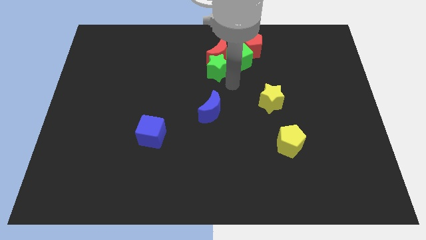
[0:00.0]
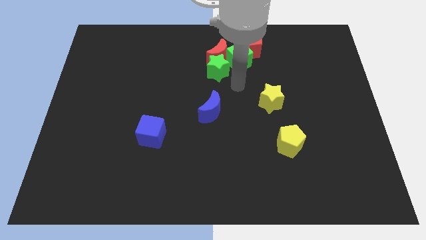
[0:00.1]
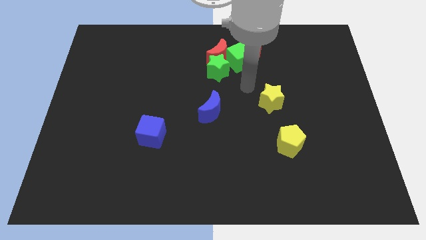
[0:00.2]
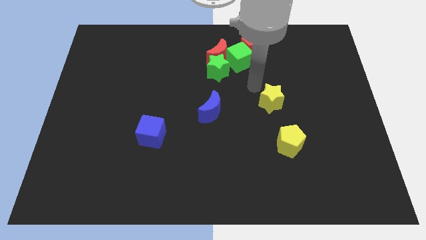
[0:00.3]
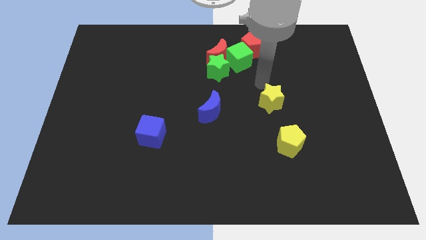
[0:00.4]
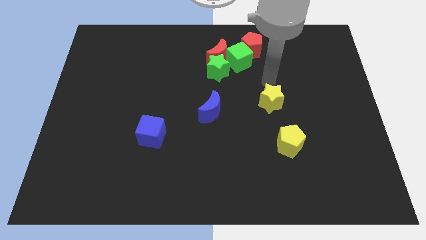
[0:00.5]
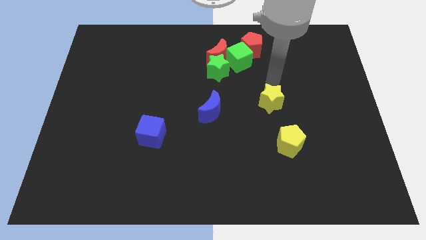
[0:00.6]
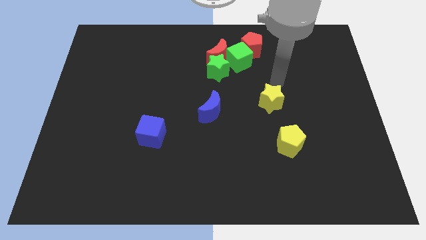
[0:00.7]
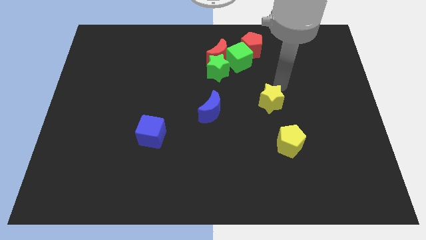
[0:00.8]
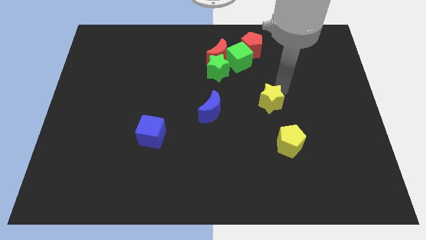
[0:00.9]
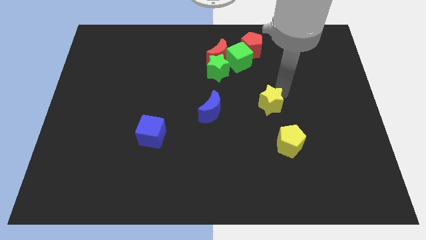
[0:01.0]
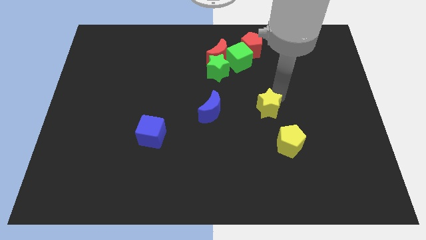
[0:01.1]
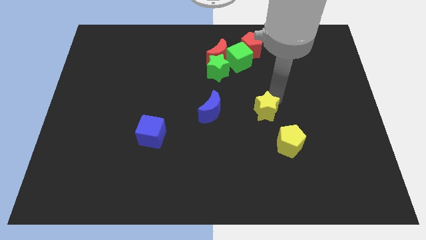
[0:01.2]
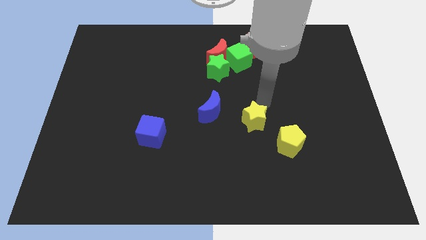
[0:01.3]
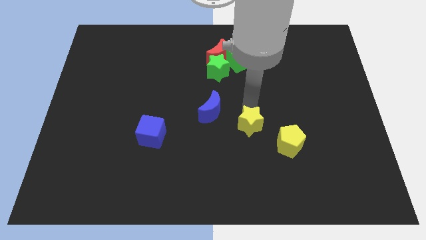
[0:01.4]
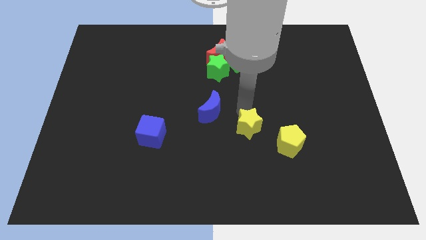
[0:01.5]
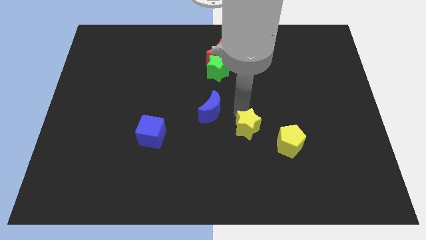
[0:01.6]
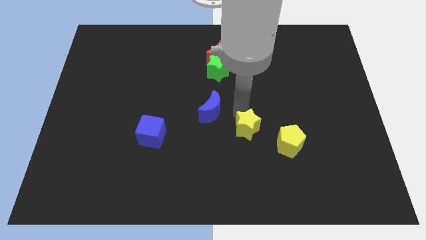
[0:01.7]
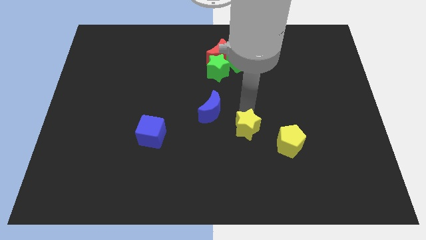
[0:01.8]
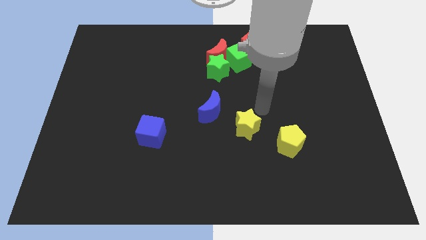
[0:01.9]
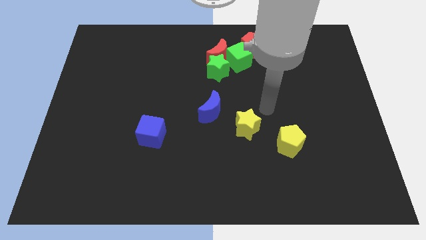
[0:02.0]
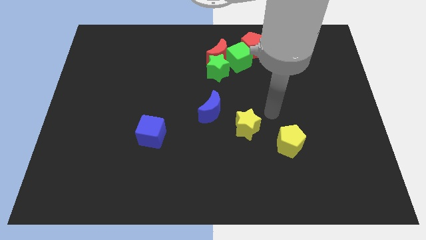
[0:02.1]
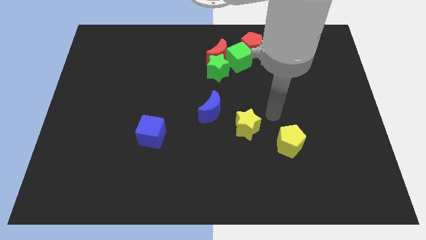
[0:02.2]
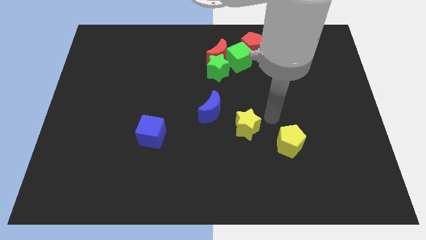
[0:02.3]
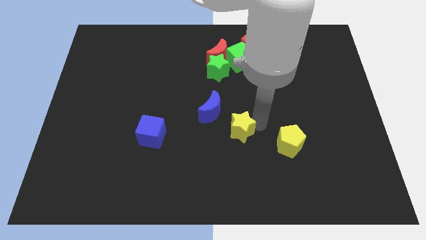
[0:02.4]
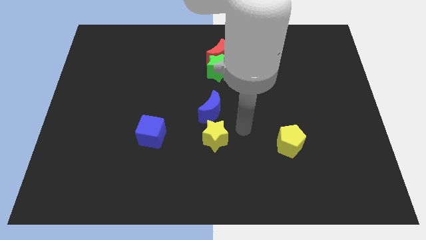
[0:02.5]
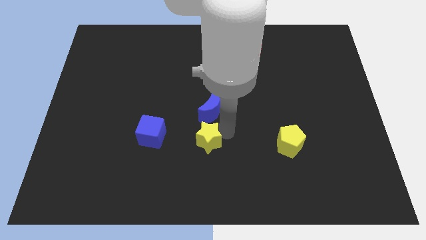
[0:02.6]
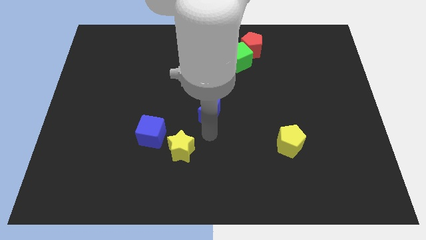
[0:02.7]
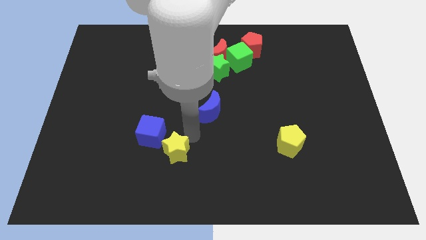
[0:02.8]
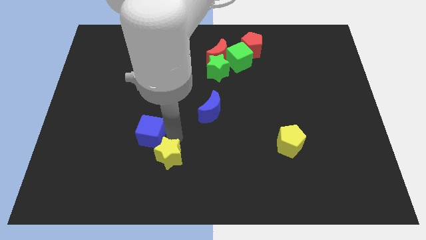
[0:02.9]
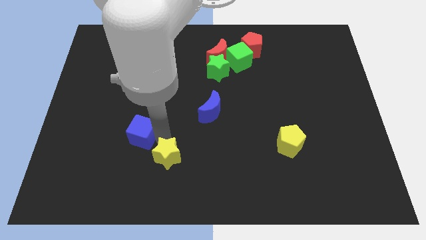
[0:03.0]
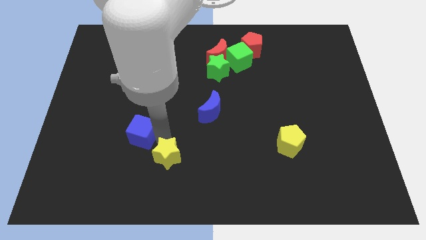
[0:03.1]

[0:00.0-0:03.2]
slide yellow star diagonally bottom left to the blue moon

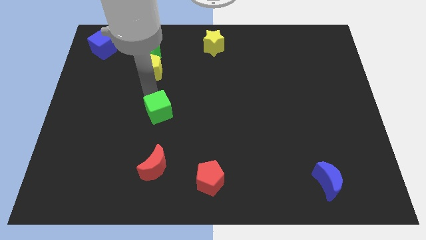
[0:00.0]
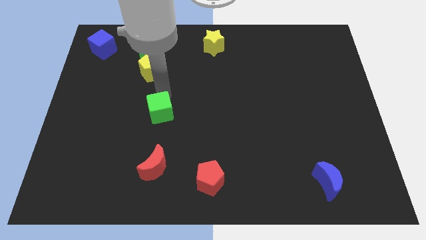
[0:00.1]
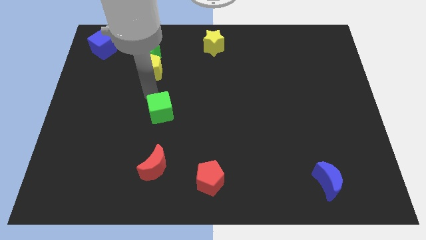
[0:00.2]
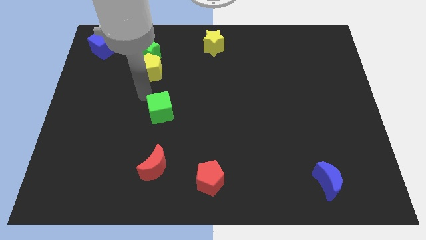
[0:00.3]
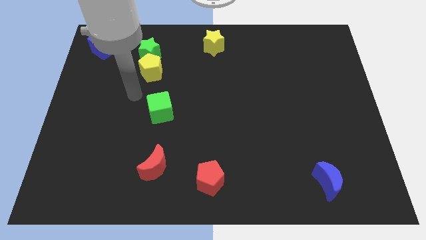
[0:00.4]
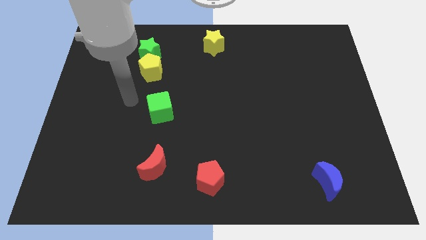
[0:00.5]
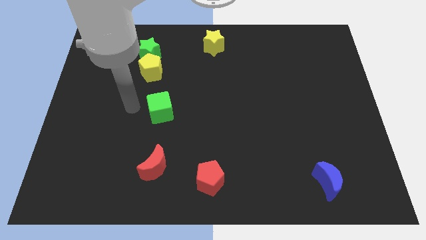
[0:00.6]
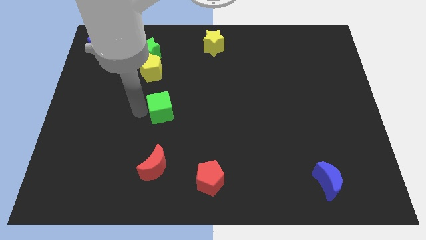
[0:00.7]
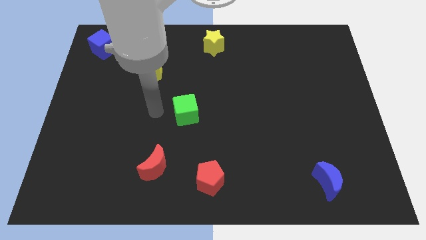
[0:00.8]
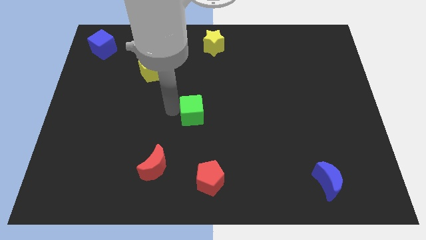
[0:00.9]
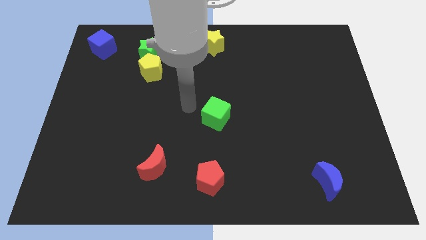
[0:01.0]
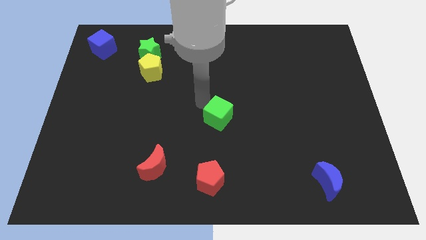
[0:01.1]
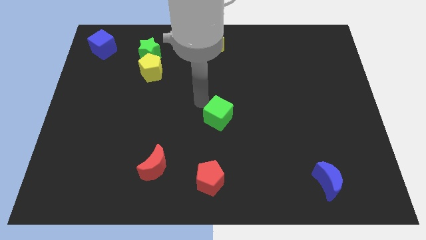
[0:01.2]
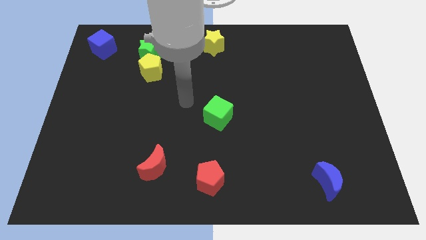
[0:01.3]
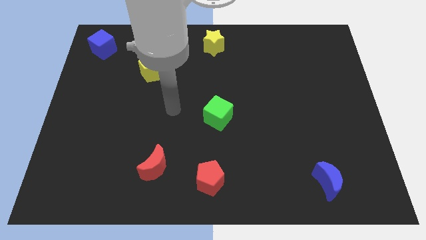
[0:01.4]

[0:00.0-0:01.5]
place the green cube in between the yellow star and red pentagon

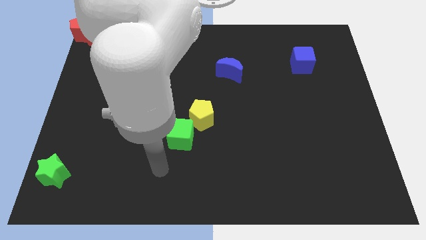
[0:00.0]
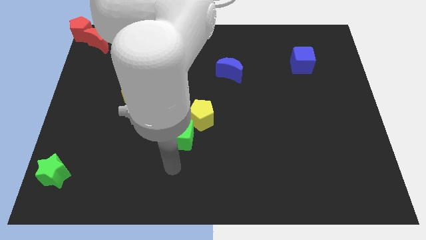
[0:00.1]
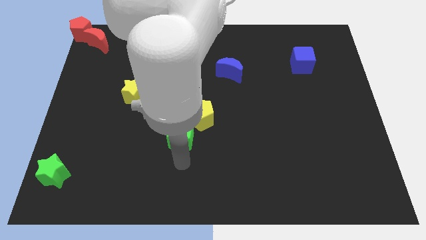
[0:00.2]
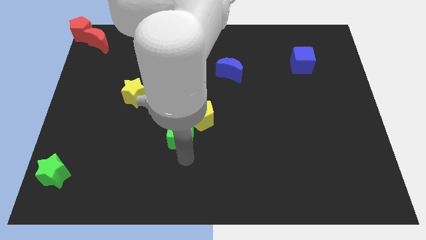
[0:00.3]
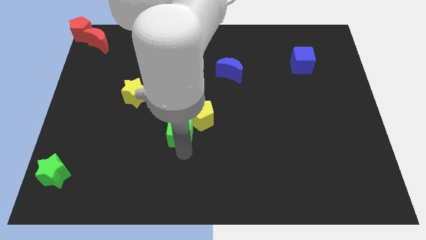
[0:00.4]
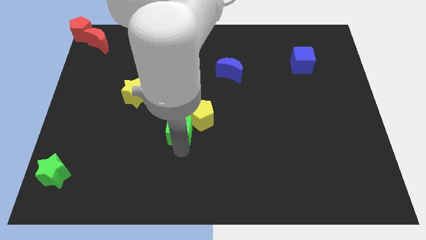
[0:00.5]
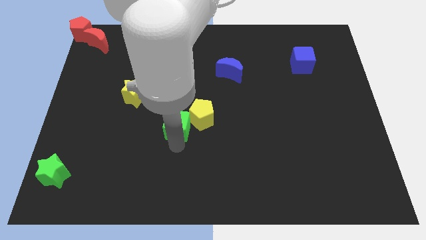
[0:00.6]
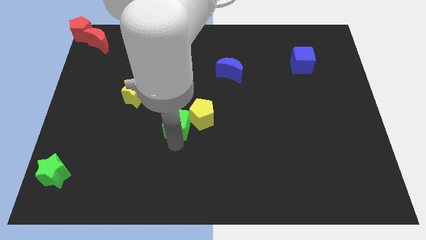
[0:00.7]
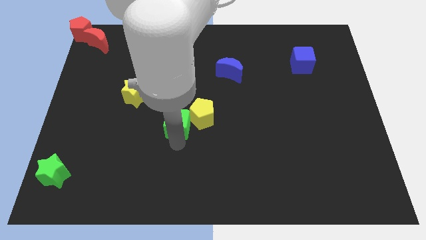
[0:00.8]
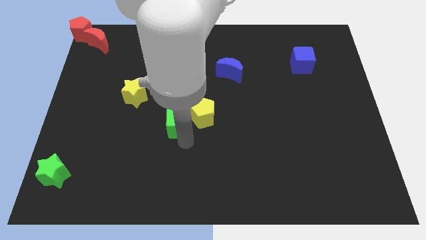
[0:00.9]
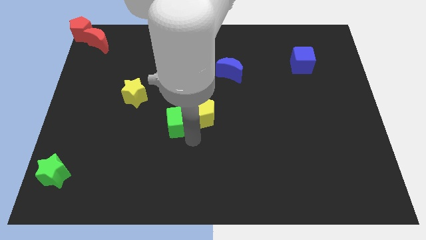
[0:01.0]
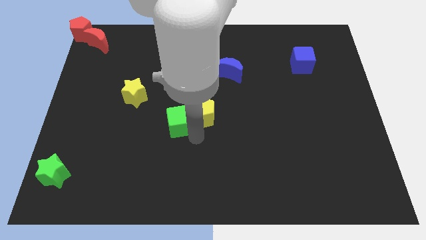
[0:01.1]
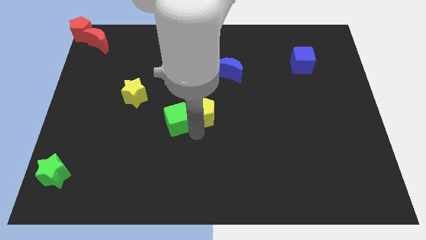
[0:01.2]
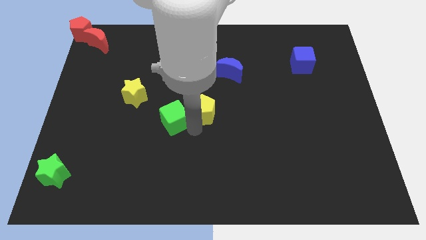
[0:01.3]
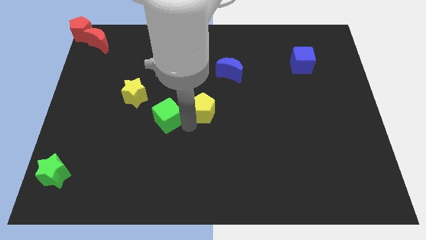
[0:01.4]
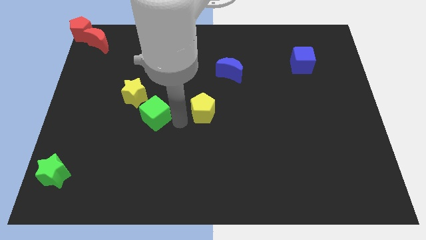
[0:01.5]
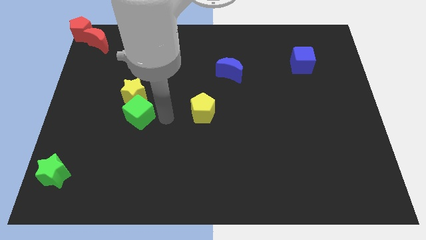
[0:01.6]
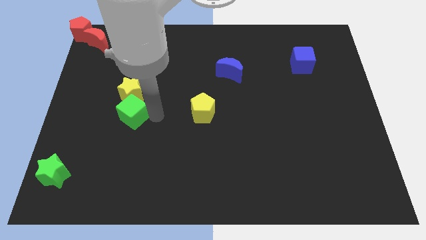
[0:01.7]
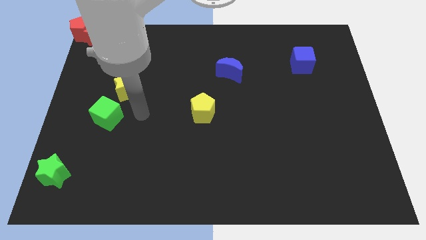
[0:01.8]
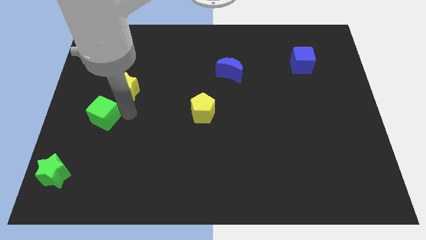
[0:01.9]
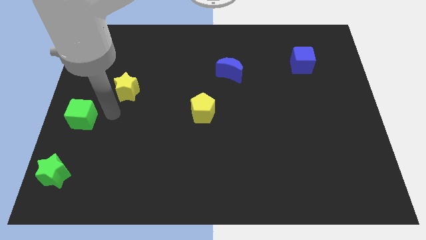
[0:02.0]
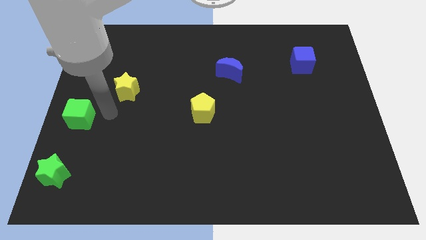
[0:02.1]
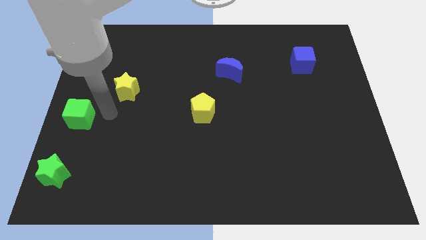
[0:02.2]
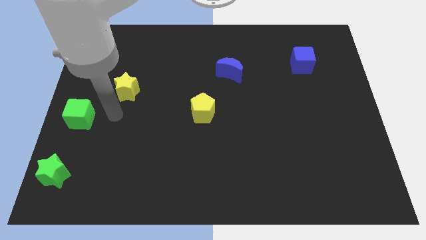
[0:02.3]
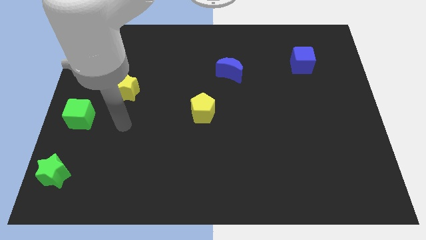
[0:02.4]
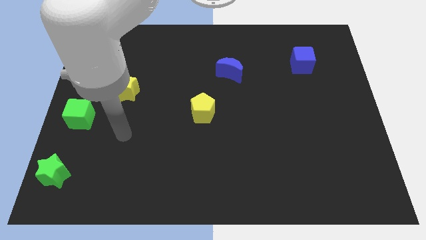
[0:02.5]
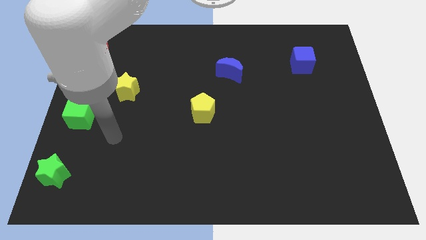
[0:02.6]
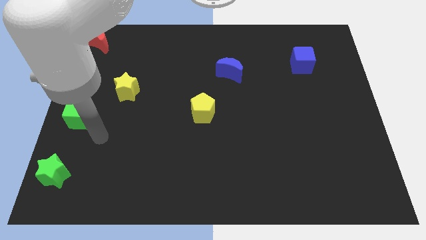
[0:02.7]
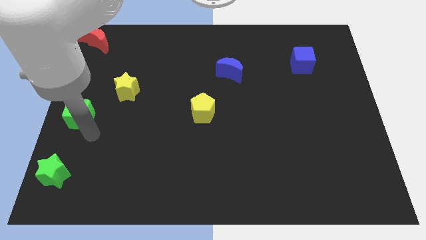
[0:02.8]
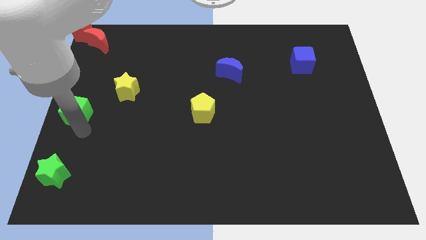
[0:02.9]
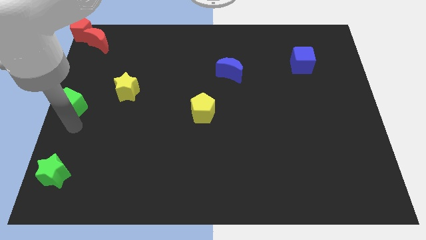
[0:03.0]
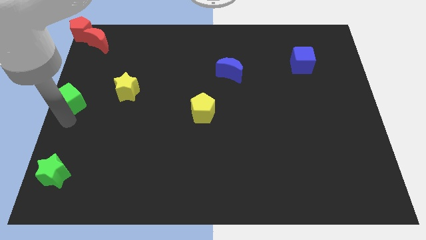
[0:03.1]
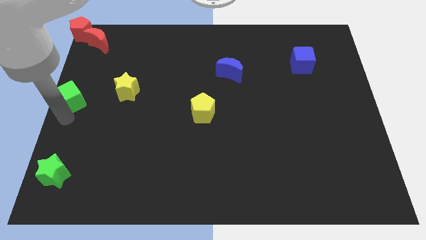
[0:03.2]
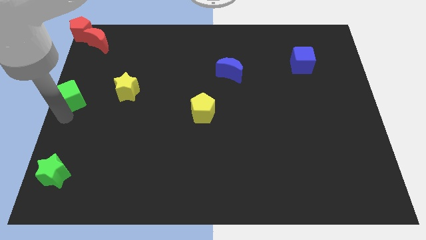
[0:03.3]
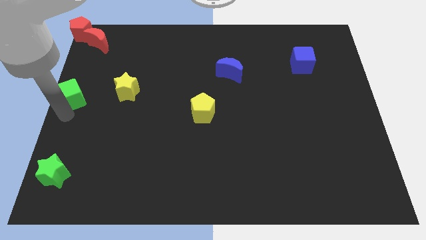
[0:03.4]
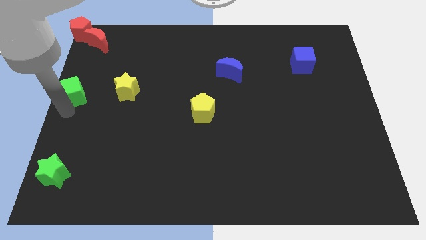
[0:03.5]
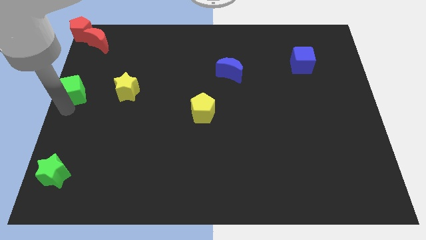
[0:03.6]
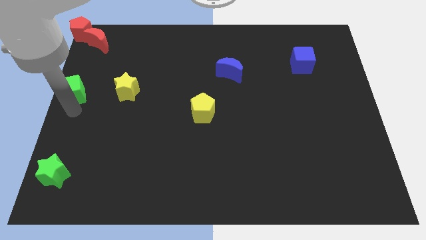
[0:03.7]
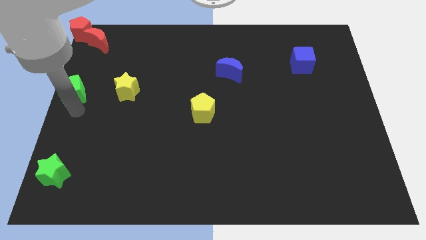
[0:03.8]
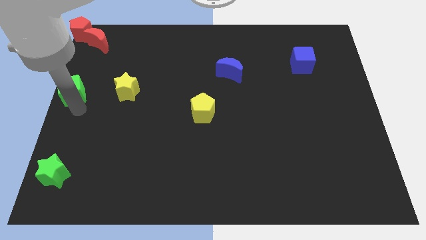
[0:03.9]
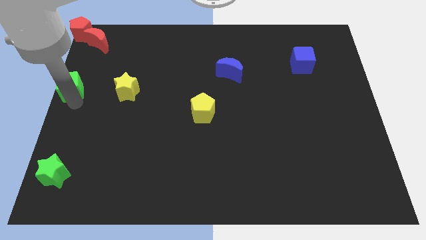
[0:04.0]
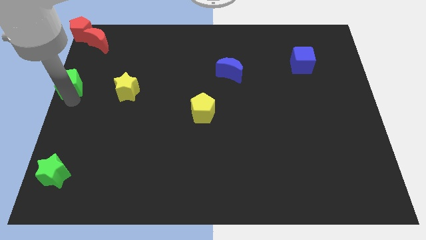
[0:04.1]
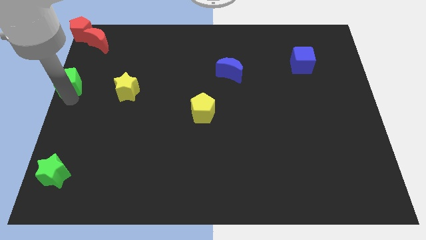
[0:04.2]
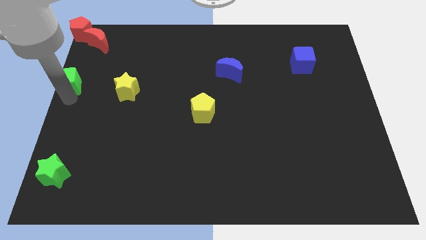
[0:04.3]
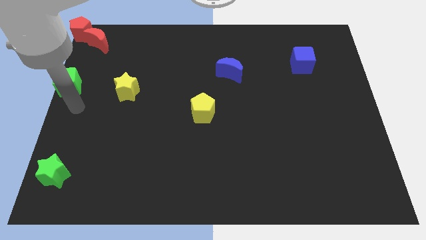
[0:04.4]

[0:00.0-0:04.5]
place the green cube parallel to the left yellow star
